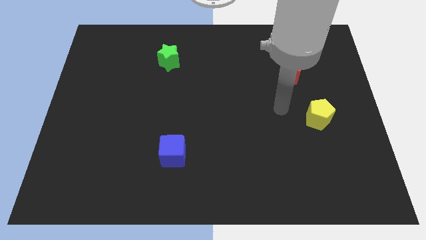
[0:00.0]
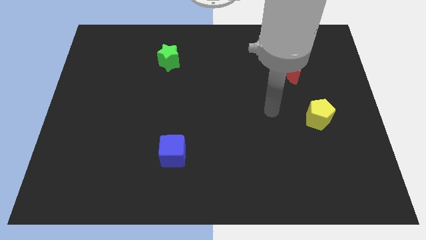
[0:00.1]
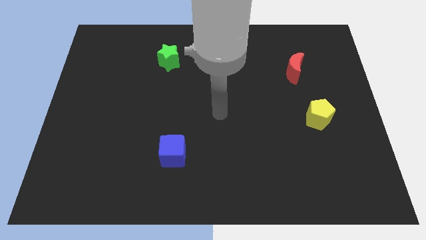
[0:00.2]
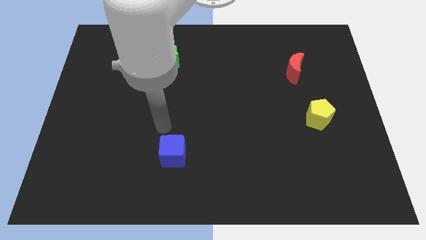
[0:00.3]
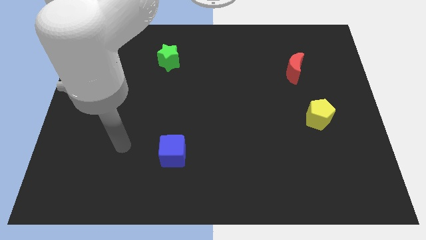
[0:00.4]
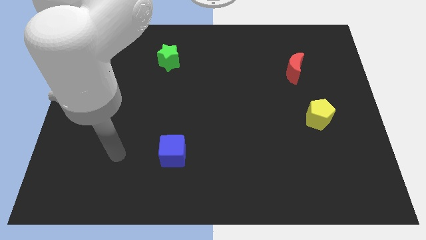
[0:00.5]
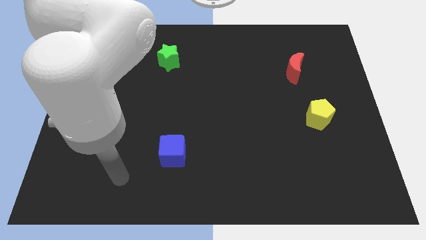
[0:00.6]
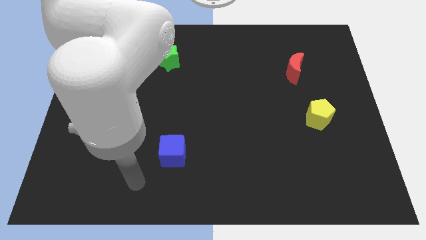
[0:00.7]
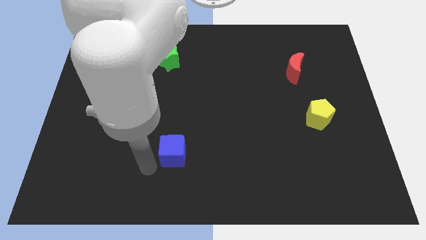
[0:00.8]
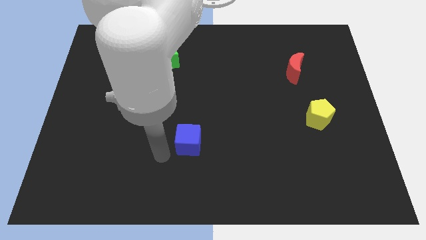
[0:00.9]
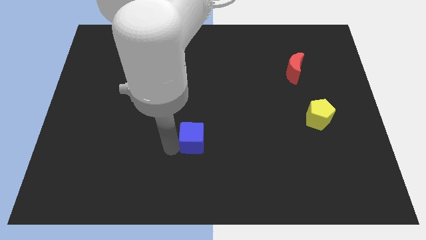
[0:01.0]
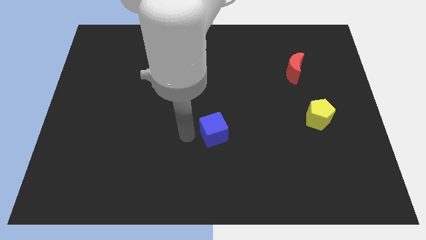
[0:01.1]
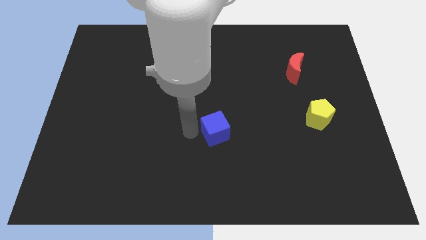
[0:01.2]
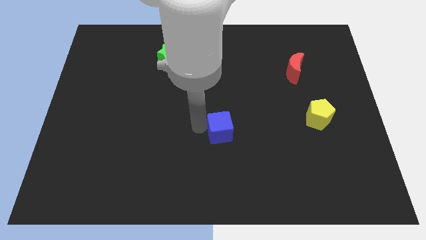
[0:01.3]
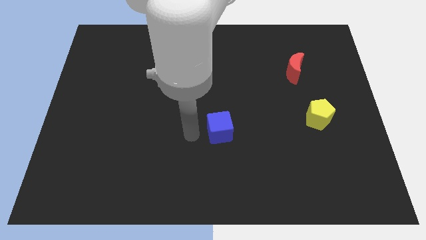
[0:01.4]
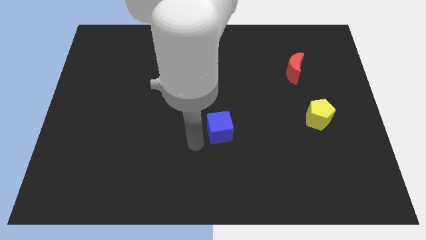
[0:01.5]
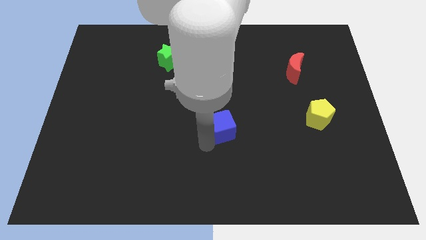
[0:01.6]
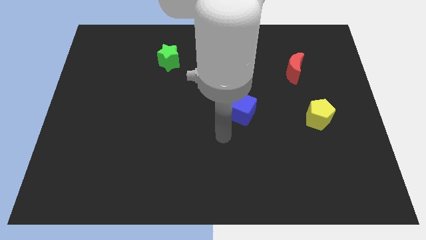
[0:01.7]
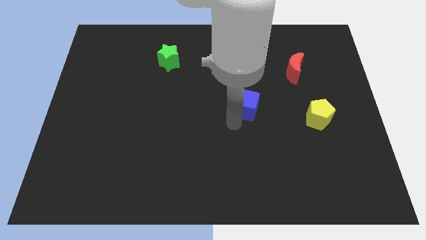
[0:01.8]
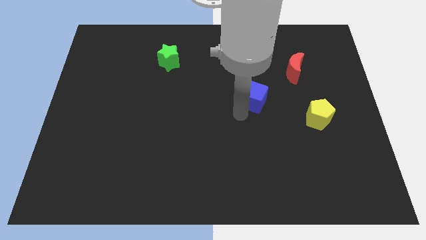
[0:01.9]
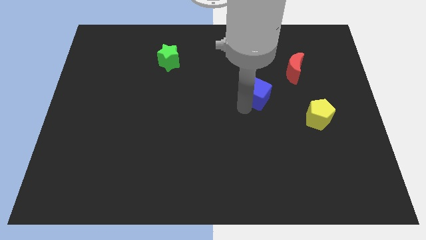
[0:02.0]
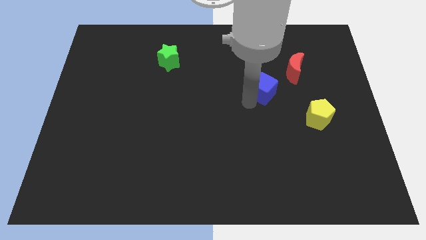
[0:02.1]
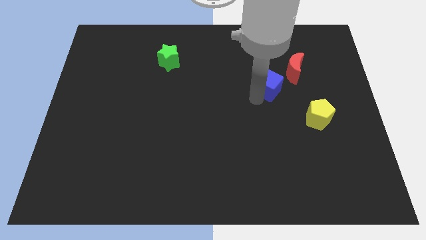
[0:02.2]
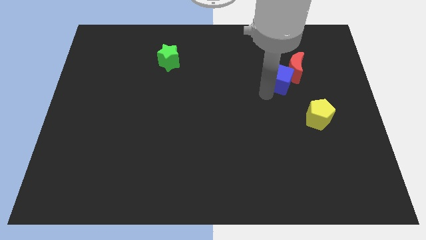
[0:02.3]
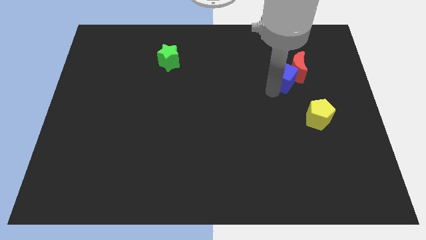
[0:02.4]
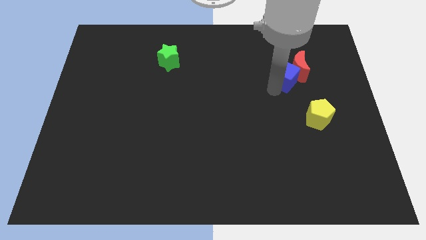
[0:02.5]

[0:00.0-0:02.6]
put the blue block to the moon

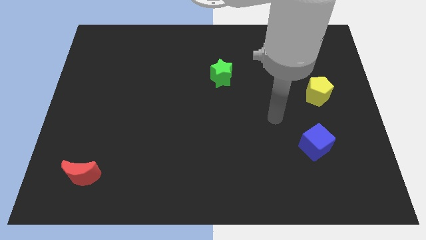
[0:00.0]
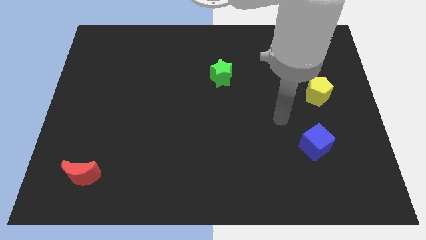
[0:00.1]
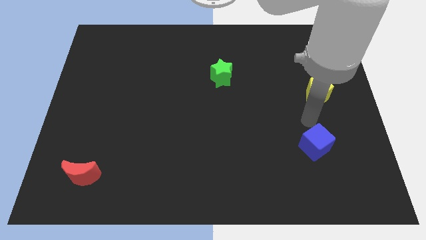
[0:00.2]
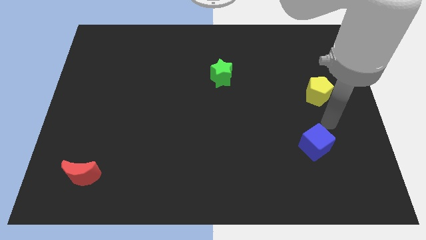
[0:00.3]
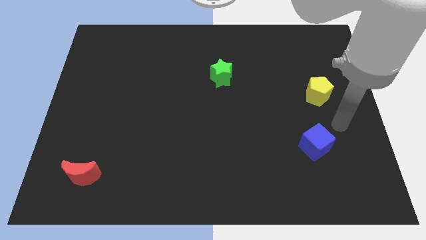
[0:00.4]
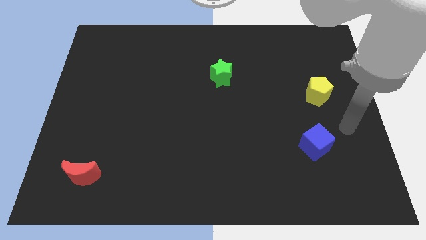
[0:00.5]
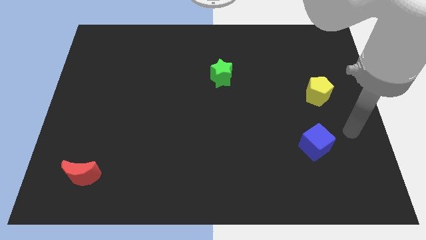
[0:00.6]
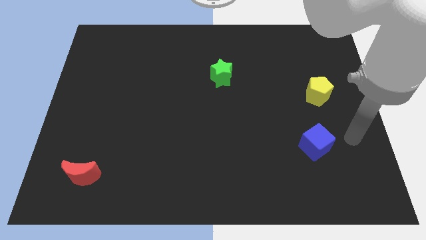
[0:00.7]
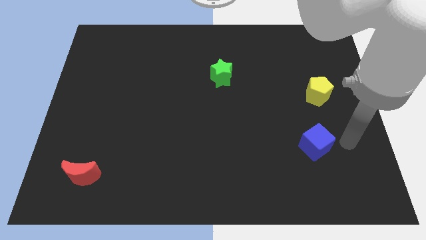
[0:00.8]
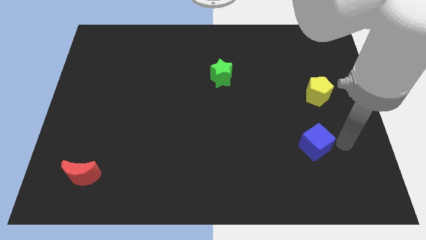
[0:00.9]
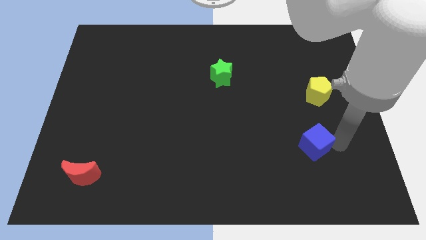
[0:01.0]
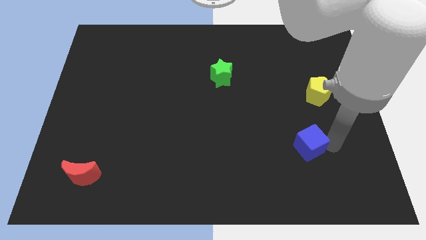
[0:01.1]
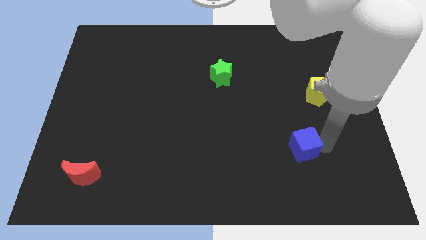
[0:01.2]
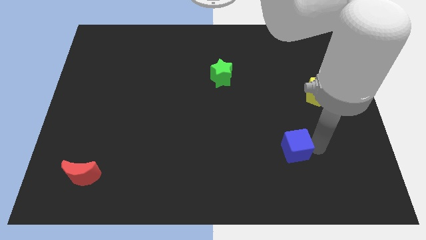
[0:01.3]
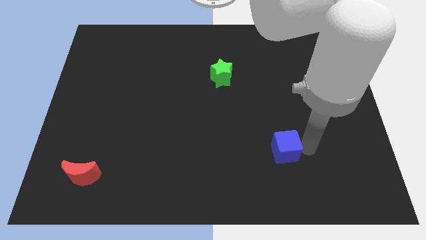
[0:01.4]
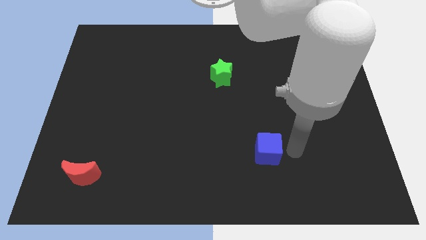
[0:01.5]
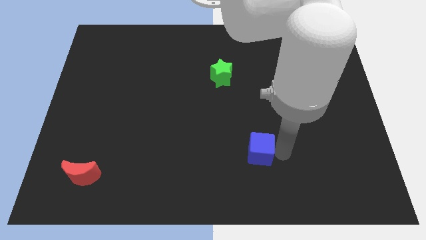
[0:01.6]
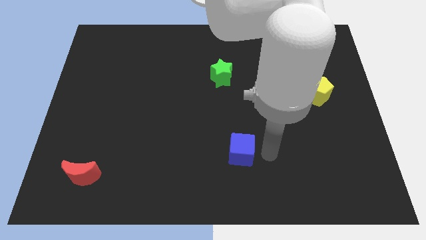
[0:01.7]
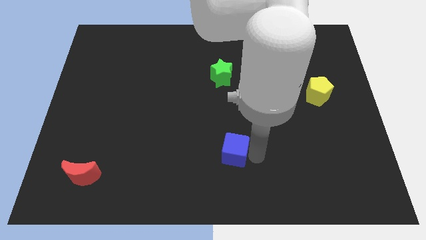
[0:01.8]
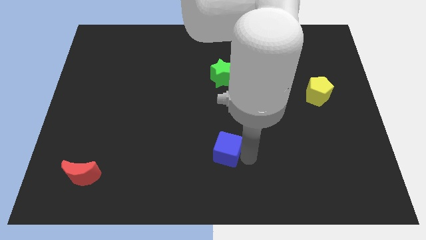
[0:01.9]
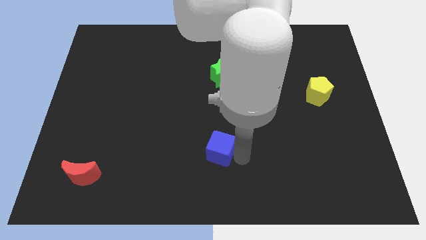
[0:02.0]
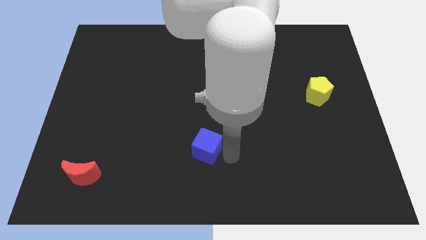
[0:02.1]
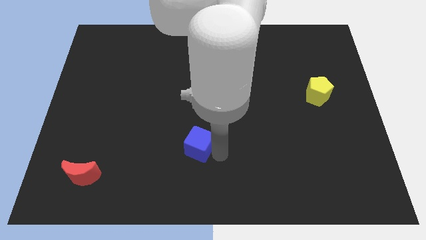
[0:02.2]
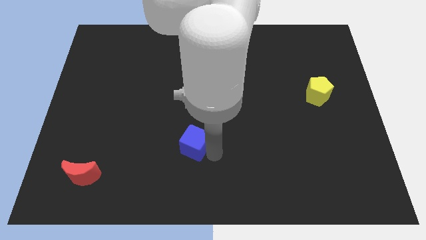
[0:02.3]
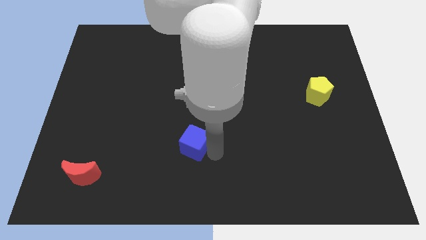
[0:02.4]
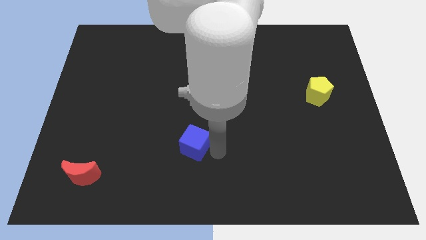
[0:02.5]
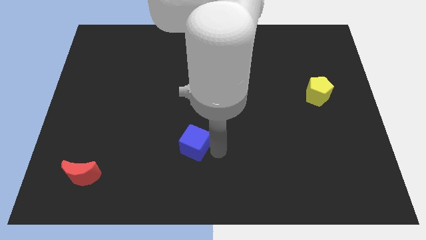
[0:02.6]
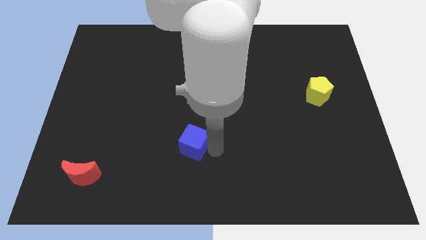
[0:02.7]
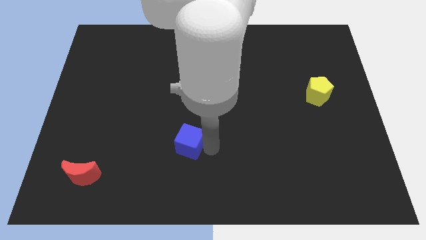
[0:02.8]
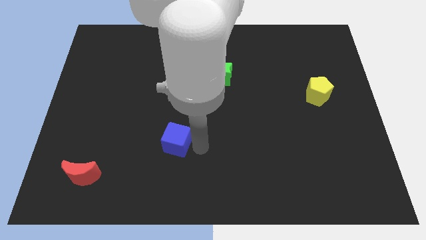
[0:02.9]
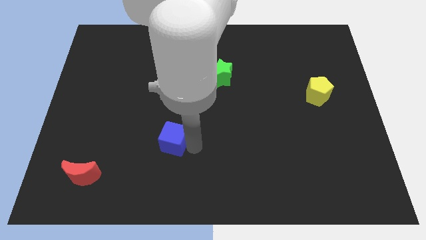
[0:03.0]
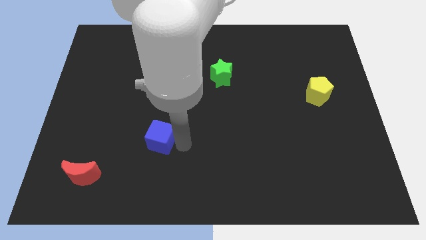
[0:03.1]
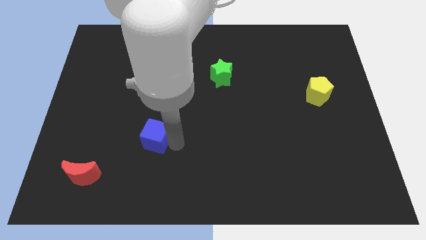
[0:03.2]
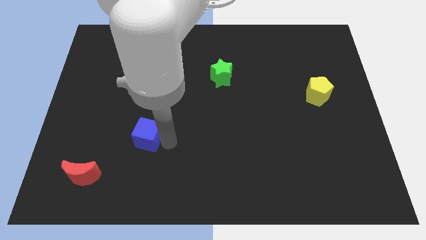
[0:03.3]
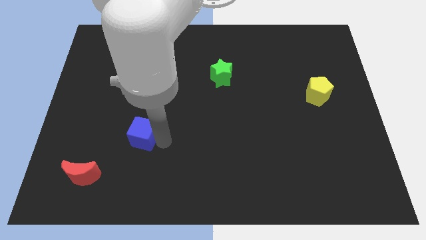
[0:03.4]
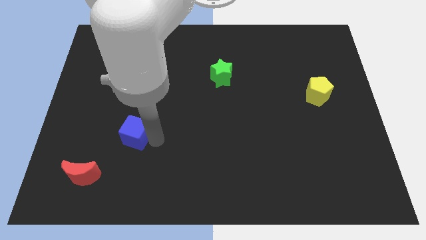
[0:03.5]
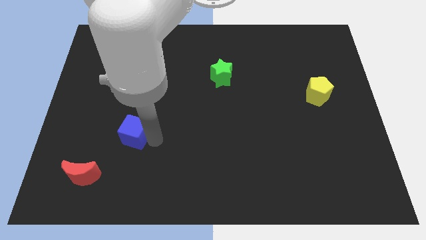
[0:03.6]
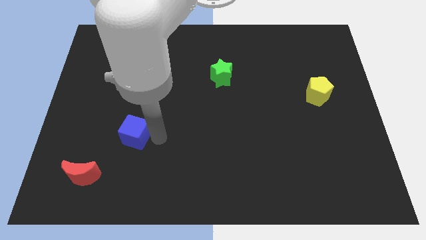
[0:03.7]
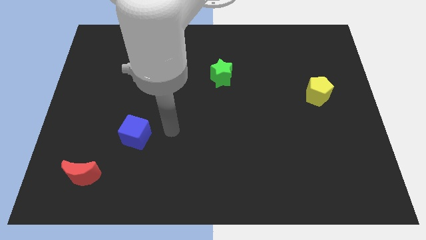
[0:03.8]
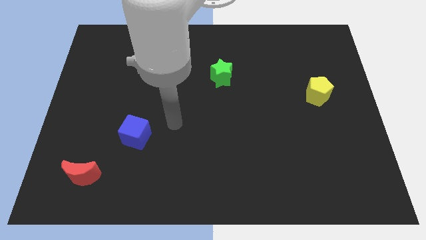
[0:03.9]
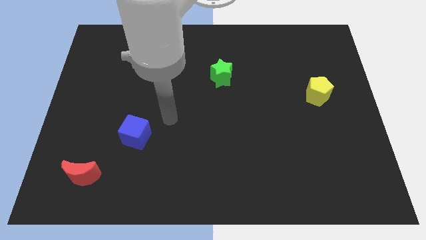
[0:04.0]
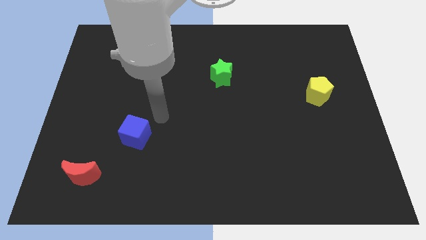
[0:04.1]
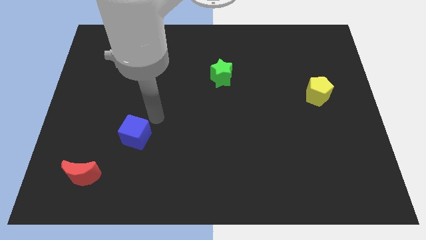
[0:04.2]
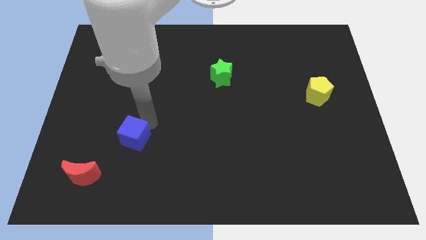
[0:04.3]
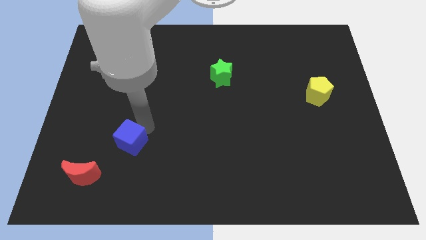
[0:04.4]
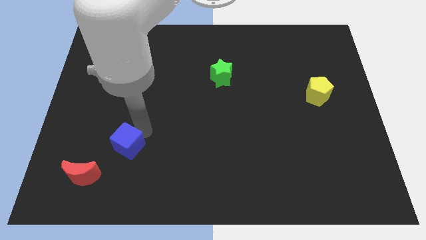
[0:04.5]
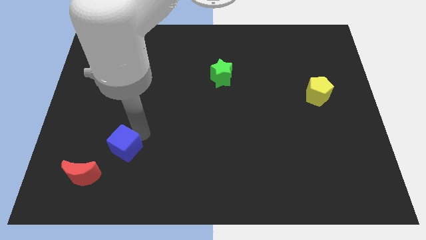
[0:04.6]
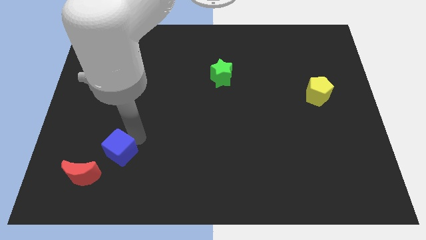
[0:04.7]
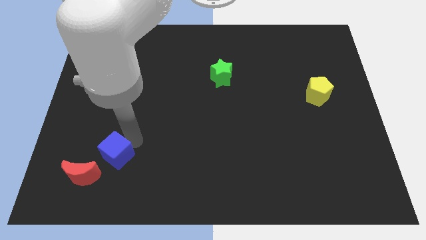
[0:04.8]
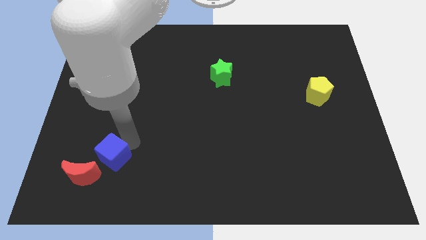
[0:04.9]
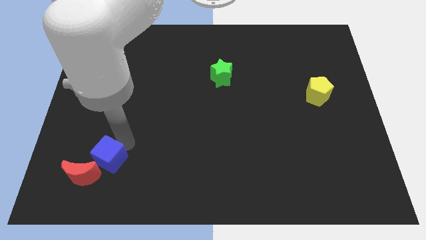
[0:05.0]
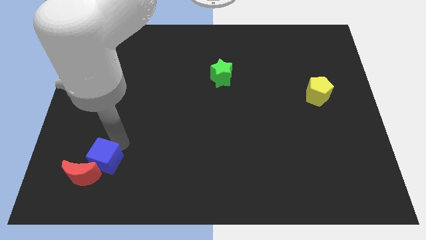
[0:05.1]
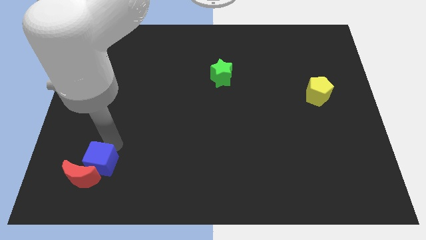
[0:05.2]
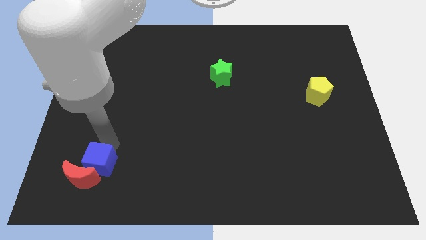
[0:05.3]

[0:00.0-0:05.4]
push the blue block to the red moon

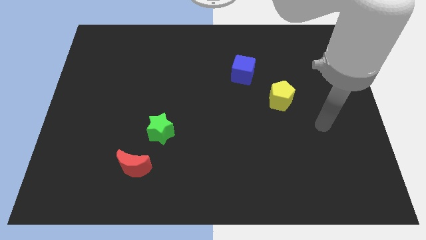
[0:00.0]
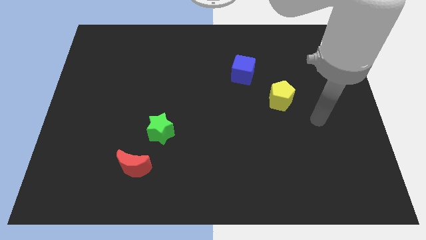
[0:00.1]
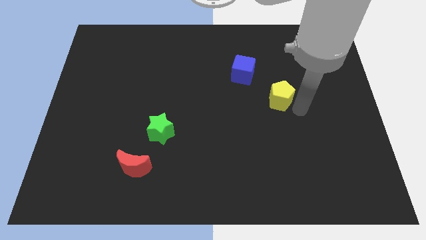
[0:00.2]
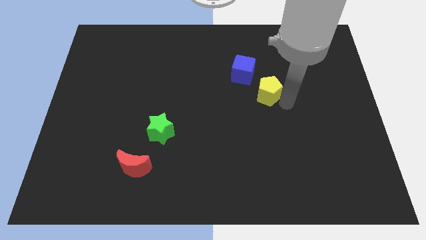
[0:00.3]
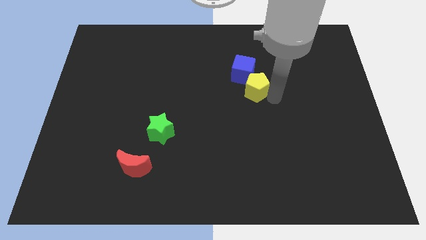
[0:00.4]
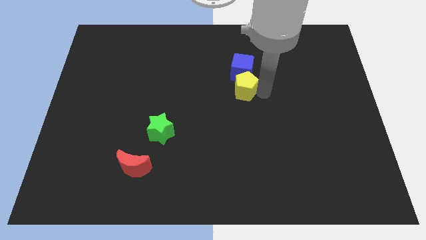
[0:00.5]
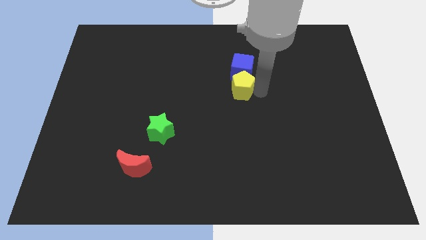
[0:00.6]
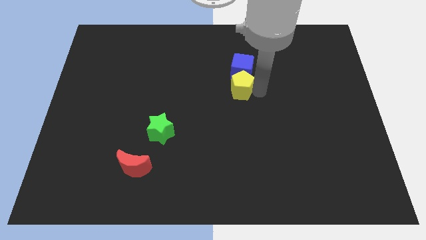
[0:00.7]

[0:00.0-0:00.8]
move the yellow block towards the blue cube
